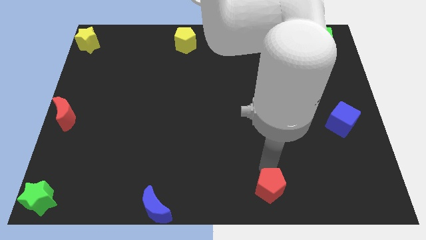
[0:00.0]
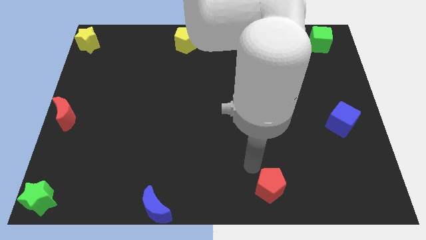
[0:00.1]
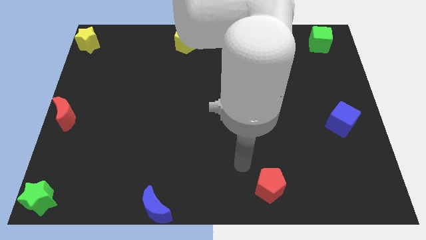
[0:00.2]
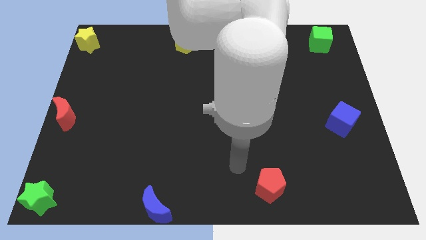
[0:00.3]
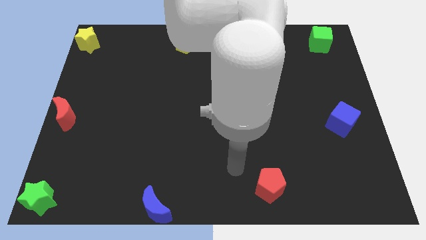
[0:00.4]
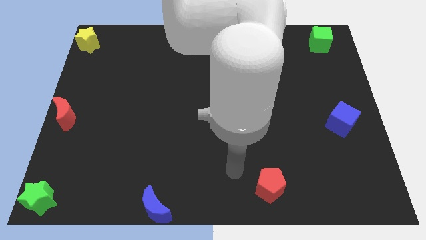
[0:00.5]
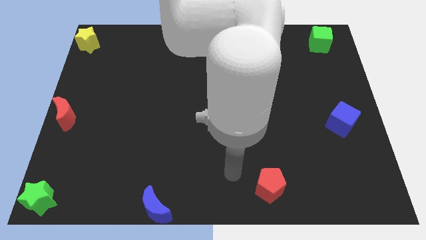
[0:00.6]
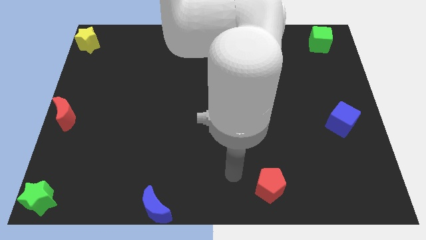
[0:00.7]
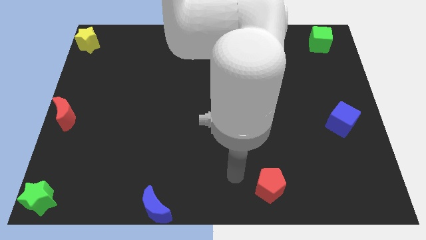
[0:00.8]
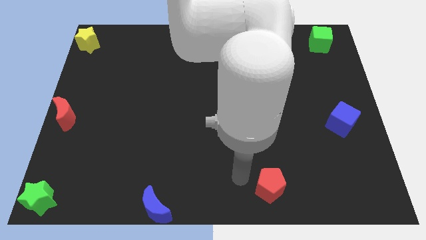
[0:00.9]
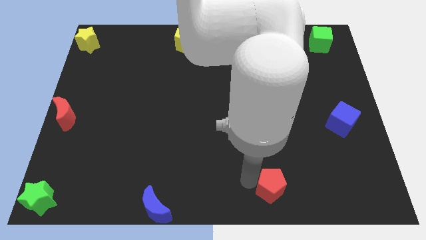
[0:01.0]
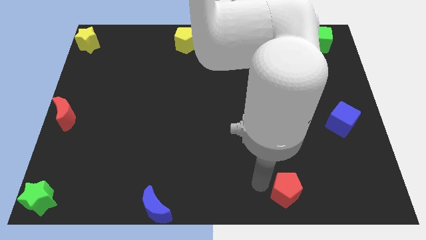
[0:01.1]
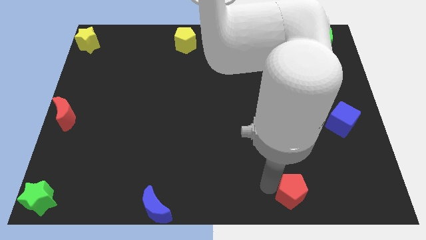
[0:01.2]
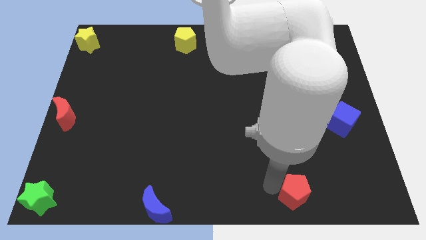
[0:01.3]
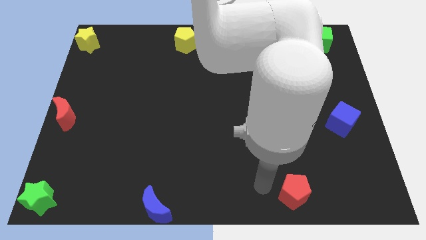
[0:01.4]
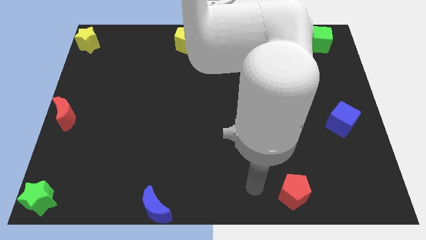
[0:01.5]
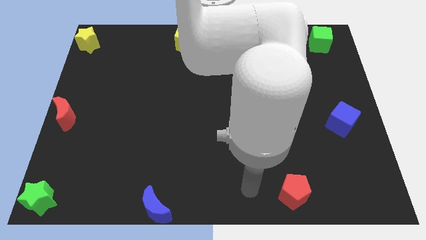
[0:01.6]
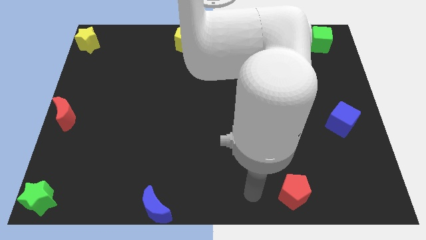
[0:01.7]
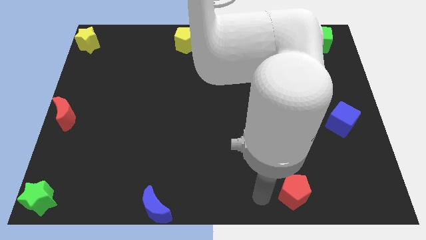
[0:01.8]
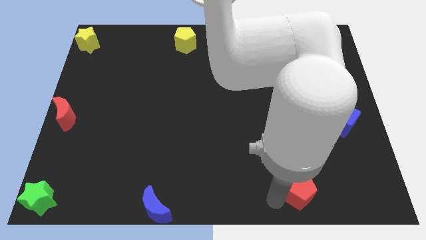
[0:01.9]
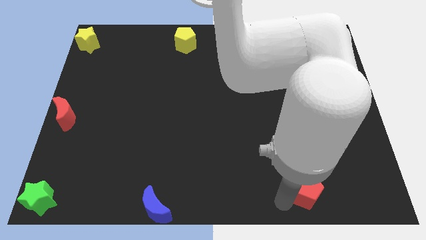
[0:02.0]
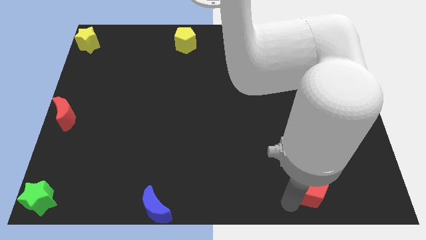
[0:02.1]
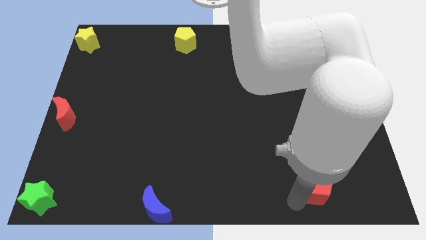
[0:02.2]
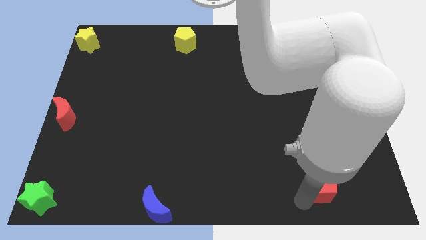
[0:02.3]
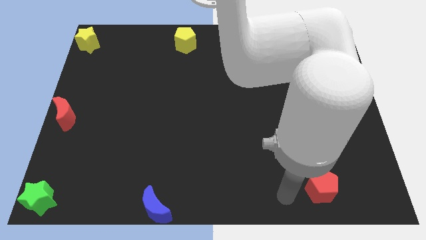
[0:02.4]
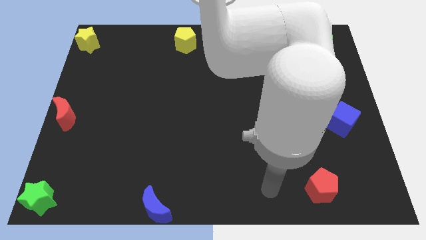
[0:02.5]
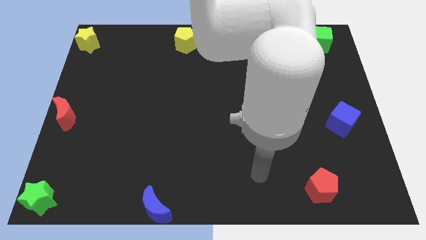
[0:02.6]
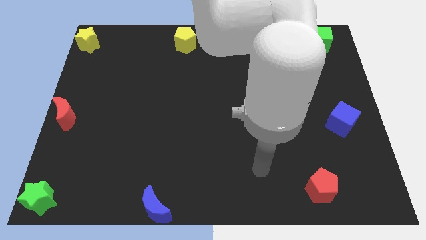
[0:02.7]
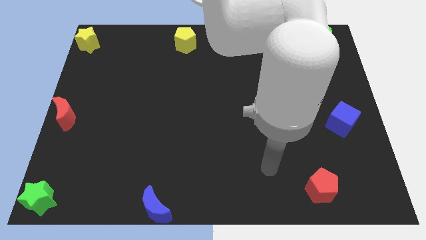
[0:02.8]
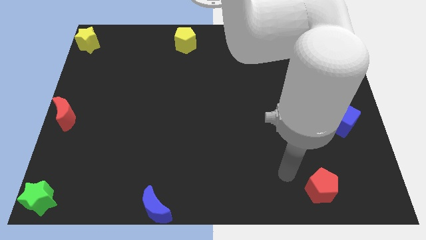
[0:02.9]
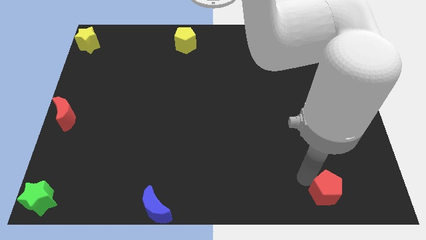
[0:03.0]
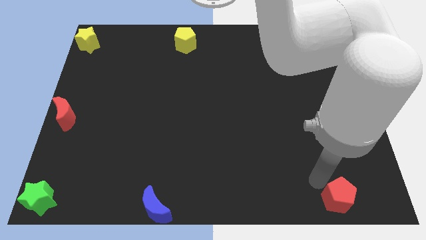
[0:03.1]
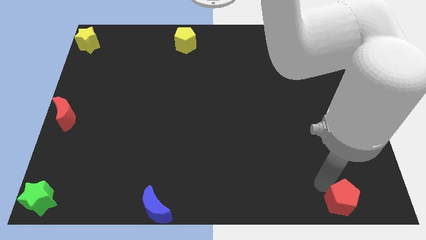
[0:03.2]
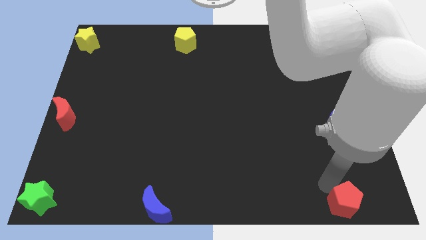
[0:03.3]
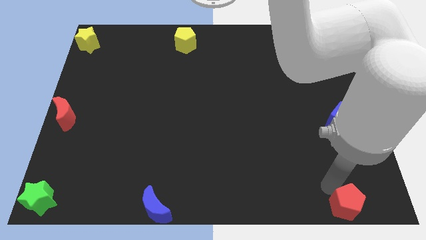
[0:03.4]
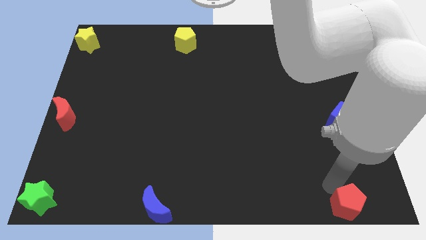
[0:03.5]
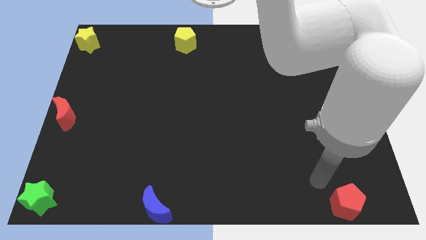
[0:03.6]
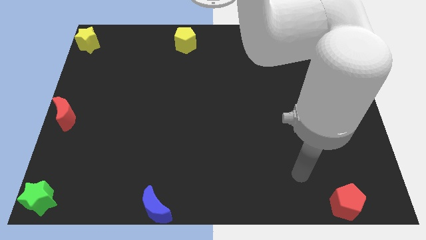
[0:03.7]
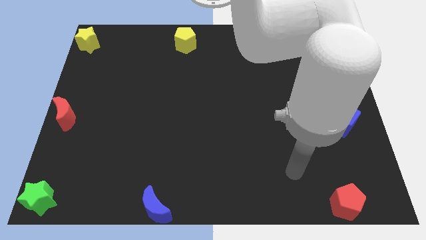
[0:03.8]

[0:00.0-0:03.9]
move the red pentagon to the bottom right side of the board

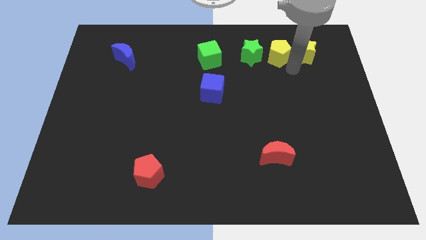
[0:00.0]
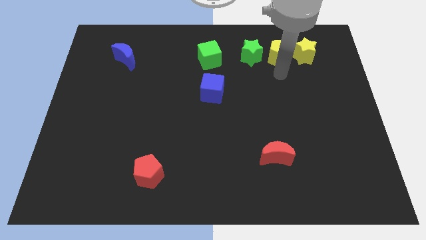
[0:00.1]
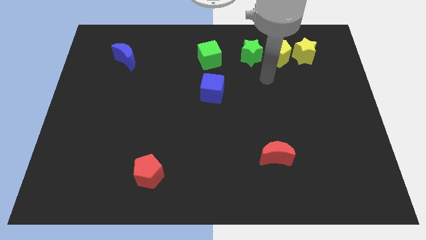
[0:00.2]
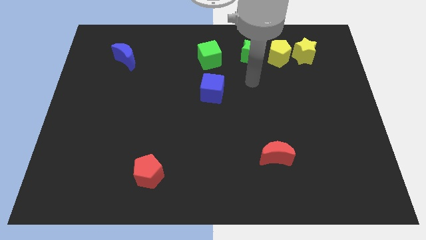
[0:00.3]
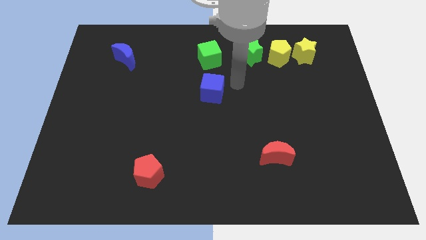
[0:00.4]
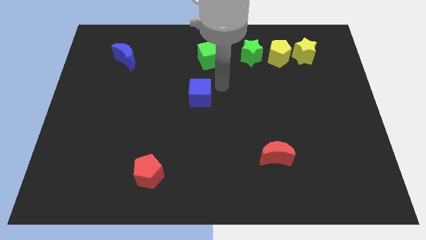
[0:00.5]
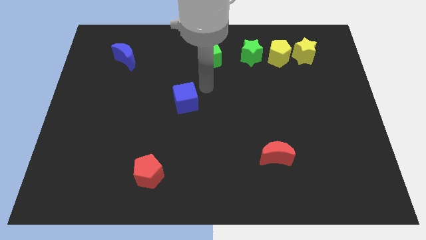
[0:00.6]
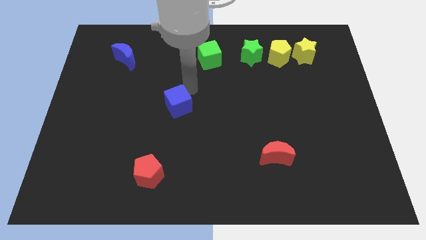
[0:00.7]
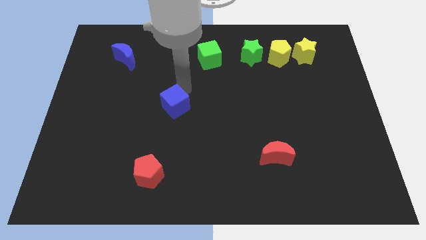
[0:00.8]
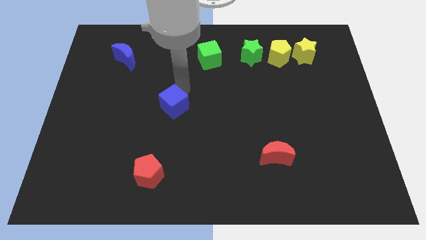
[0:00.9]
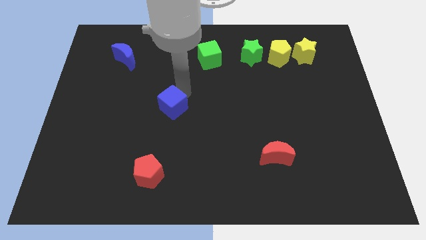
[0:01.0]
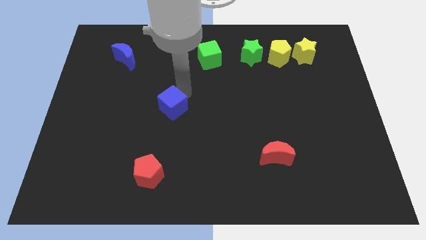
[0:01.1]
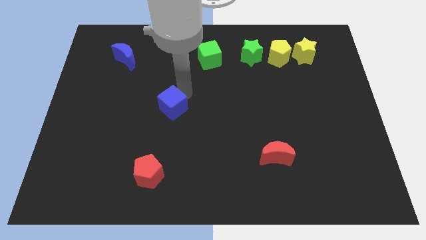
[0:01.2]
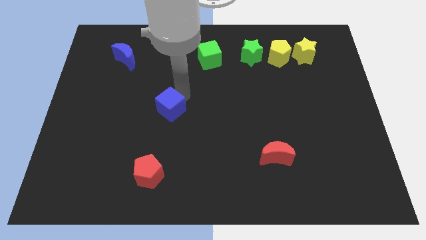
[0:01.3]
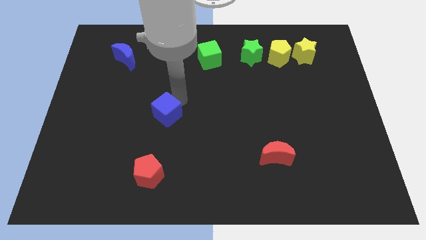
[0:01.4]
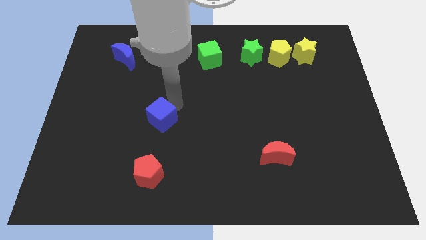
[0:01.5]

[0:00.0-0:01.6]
push blue cube vertical to red pentagon

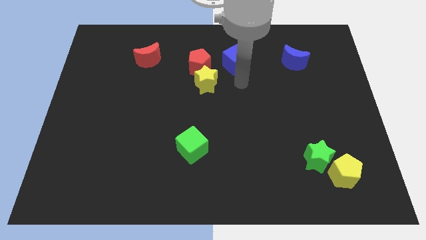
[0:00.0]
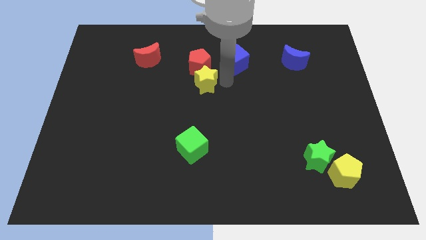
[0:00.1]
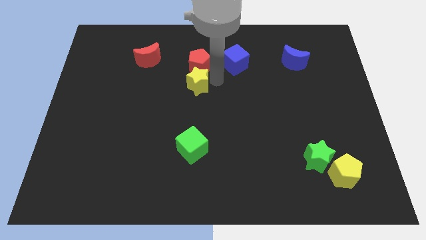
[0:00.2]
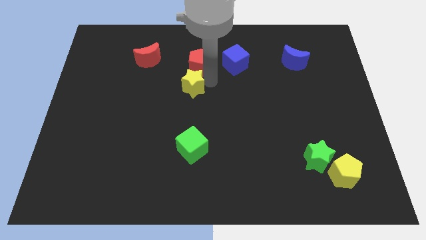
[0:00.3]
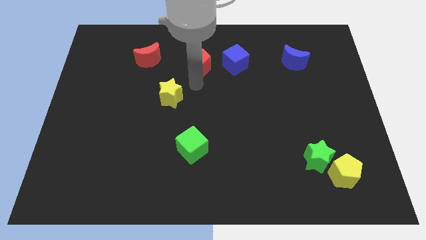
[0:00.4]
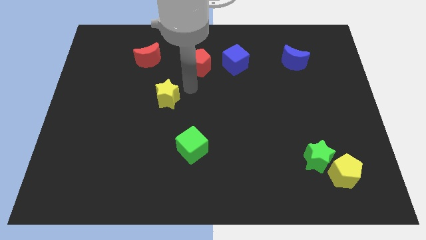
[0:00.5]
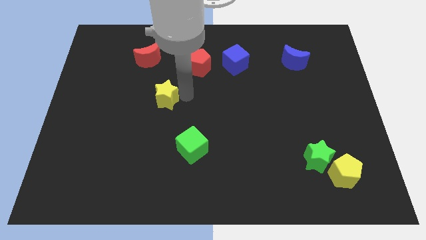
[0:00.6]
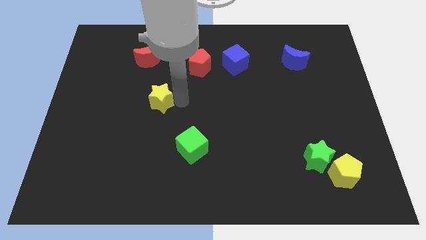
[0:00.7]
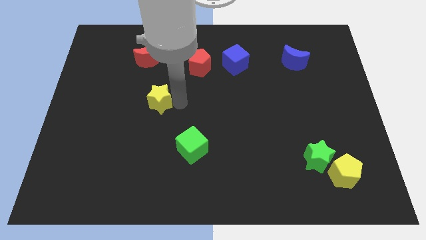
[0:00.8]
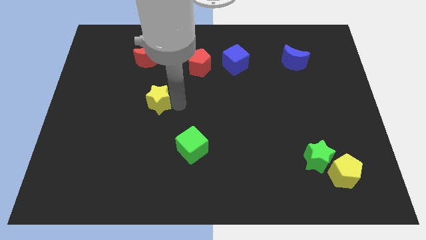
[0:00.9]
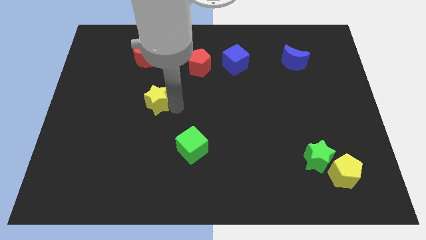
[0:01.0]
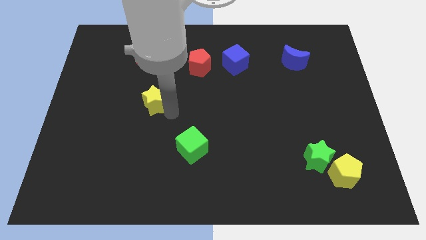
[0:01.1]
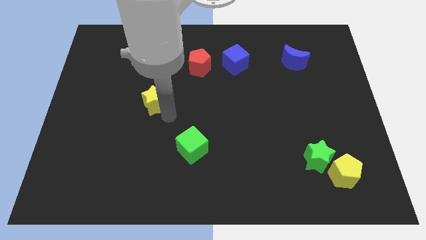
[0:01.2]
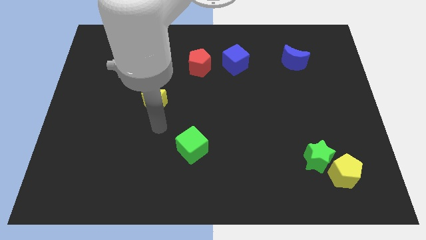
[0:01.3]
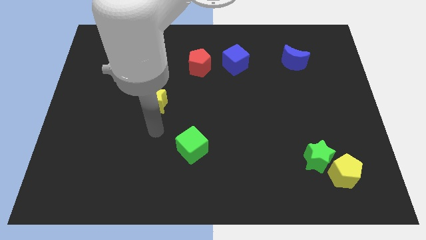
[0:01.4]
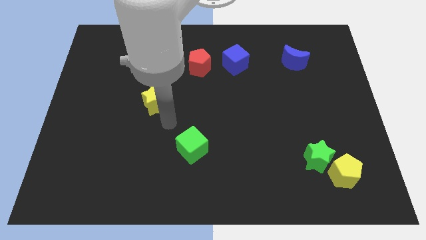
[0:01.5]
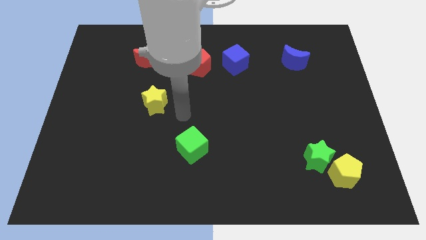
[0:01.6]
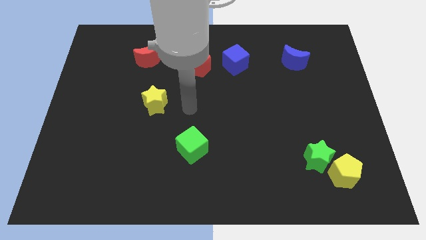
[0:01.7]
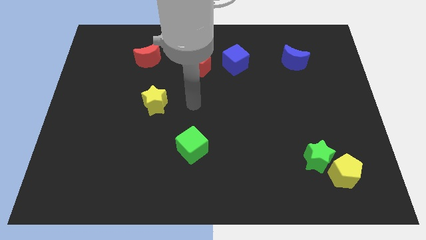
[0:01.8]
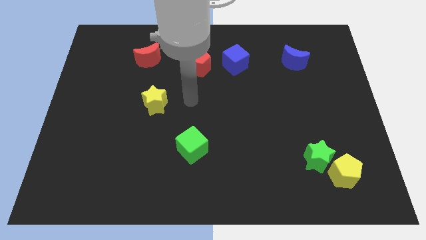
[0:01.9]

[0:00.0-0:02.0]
push the yellow star below to the red crescent

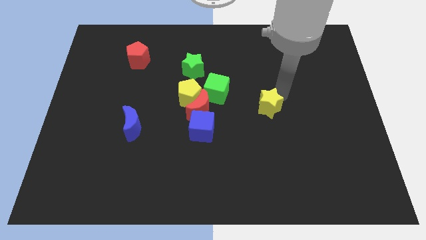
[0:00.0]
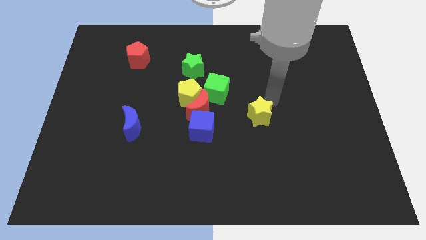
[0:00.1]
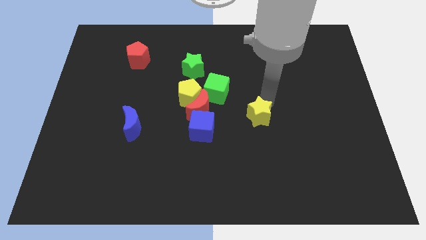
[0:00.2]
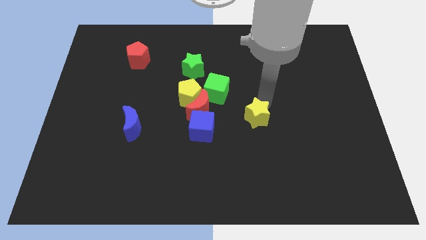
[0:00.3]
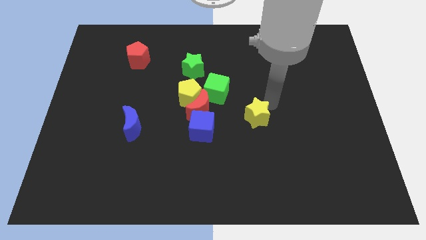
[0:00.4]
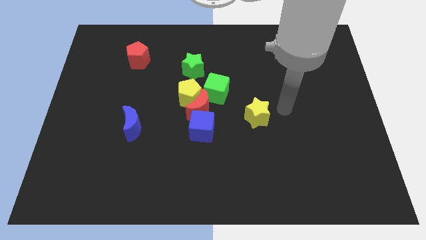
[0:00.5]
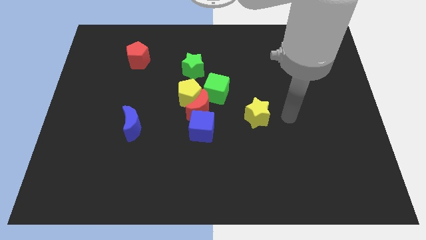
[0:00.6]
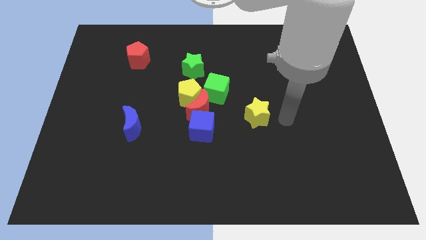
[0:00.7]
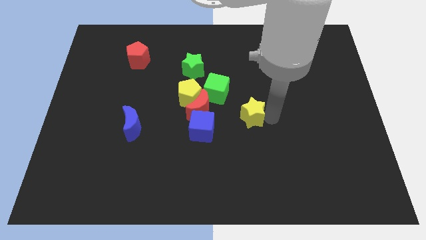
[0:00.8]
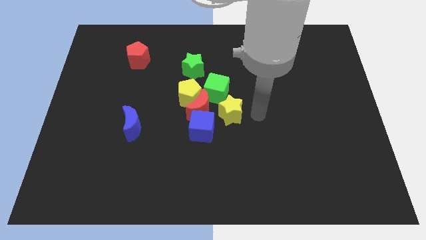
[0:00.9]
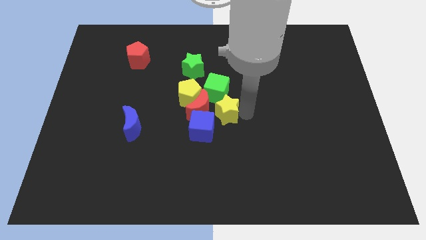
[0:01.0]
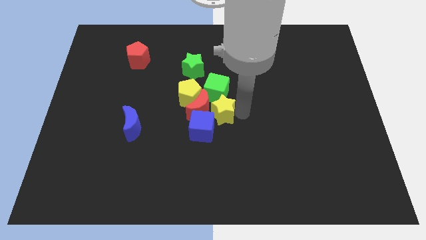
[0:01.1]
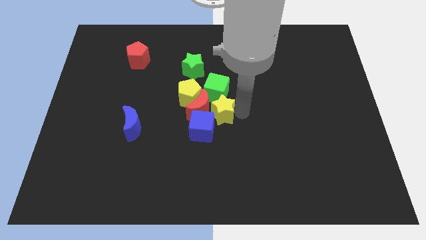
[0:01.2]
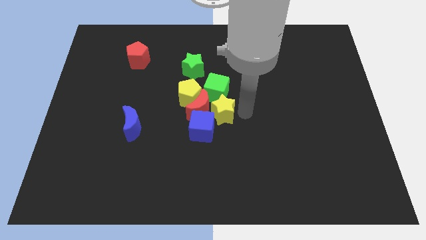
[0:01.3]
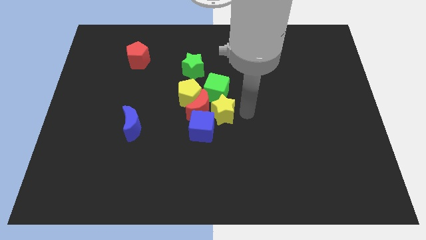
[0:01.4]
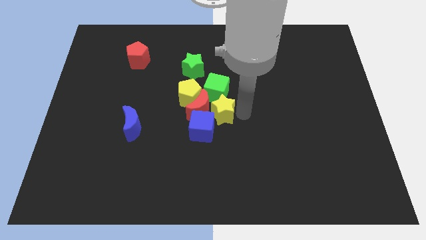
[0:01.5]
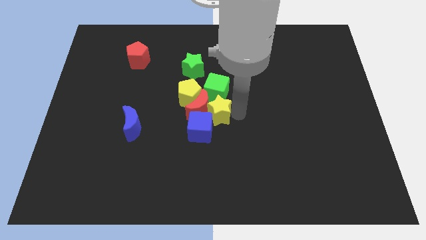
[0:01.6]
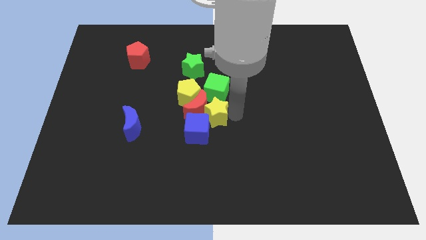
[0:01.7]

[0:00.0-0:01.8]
slide the yellow star into the group of blocks
